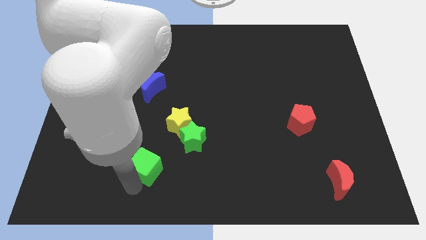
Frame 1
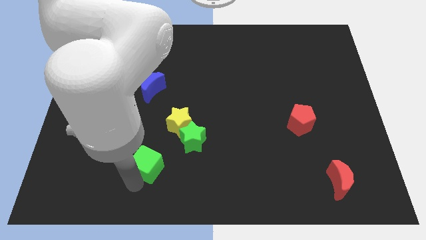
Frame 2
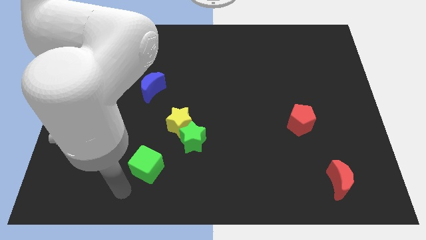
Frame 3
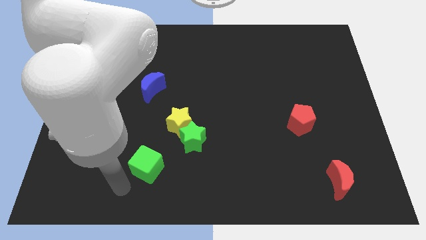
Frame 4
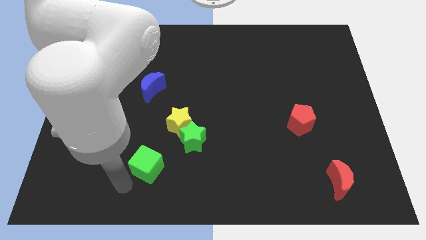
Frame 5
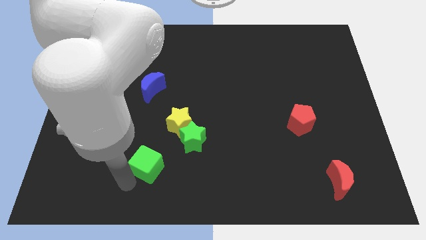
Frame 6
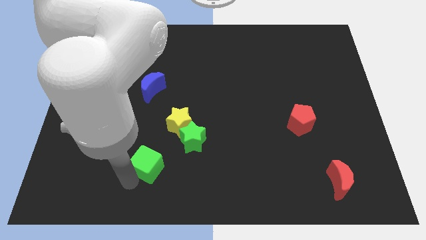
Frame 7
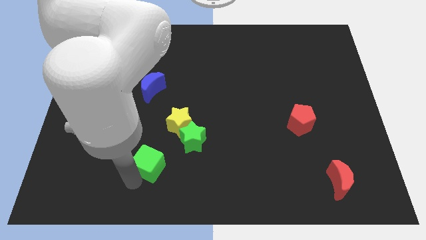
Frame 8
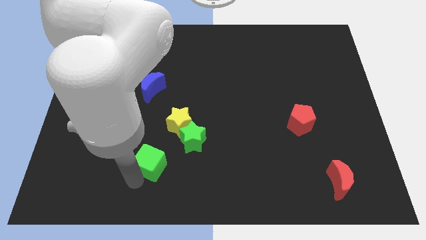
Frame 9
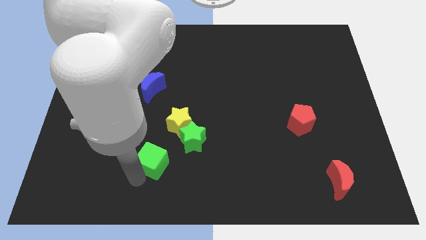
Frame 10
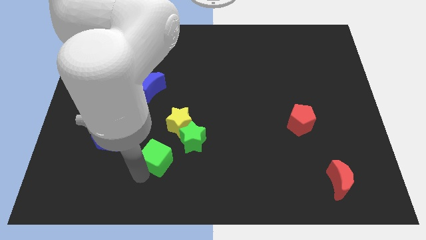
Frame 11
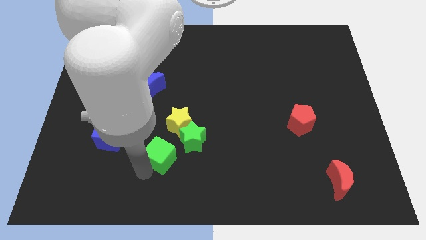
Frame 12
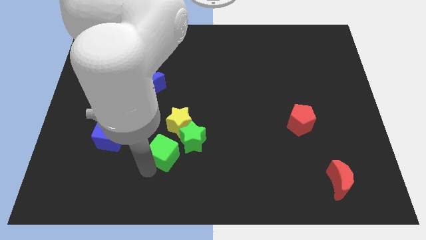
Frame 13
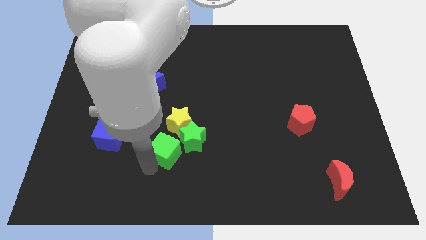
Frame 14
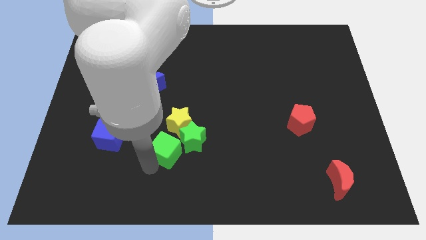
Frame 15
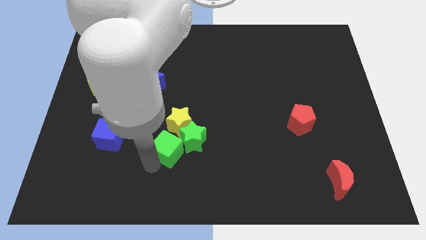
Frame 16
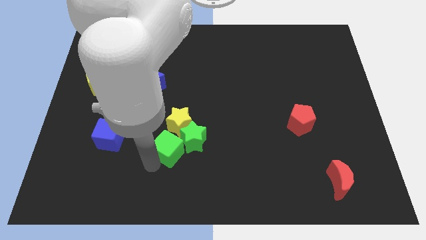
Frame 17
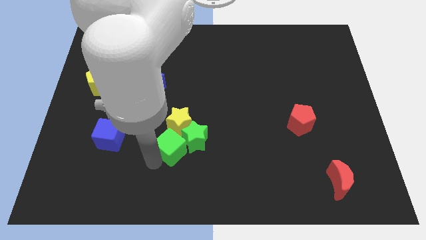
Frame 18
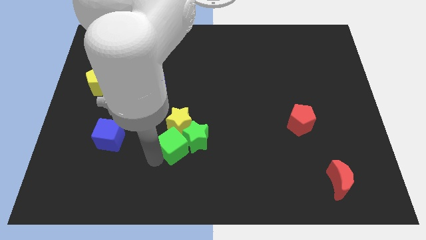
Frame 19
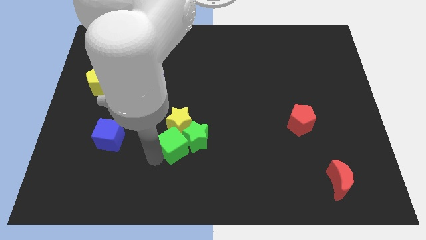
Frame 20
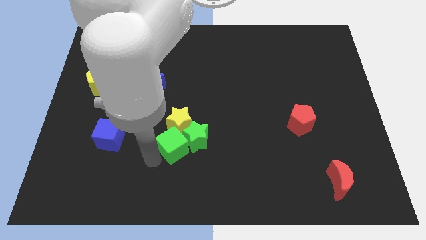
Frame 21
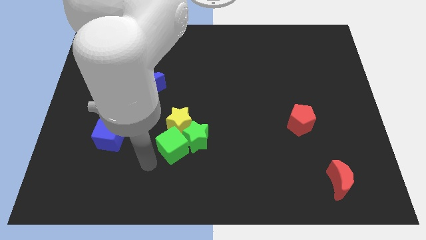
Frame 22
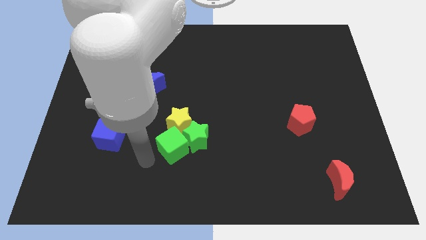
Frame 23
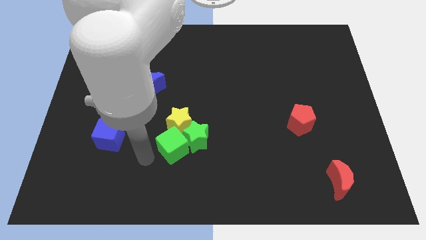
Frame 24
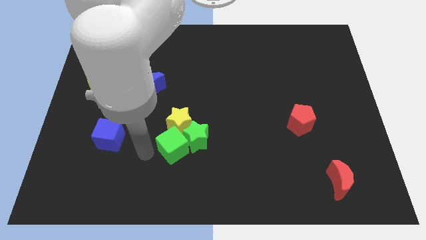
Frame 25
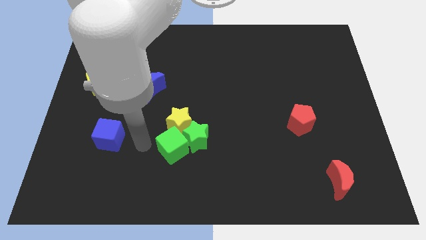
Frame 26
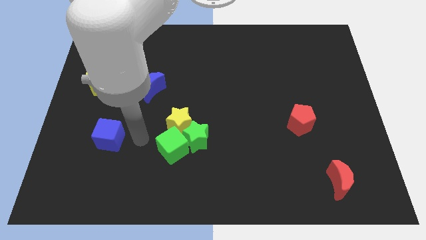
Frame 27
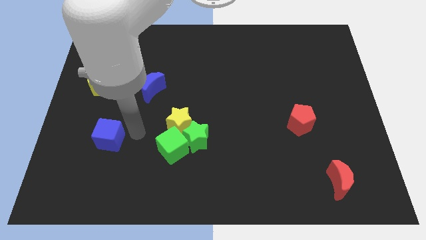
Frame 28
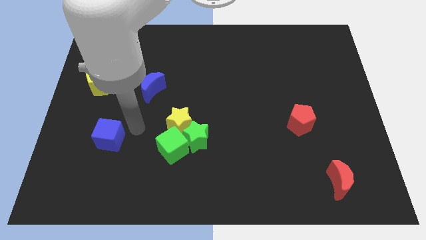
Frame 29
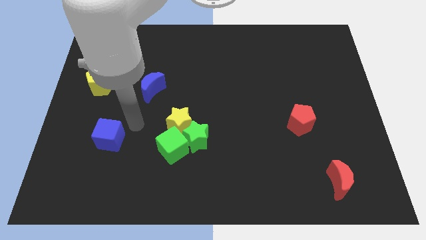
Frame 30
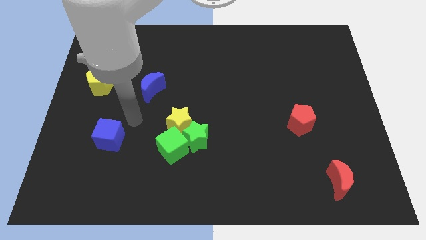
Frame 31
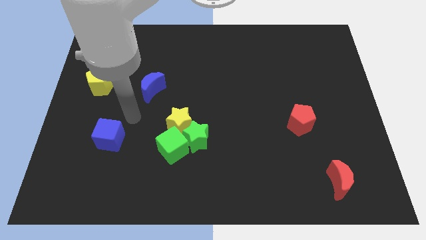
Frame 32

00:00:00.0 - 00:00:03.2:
push the green cube into the green star

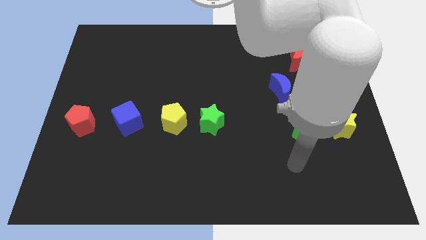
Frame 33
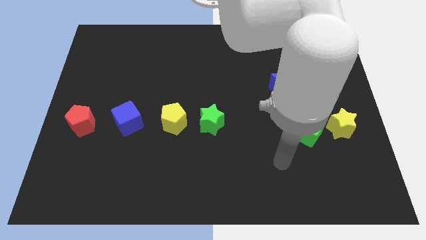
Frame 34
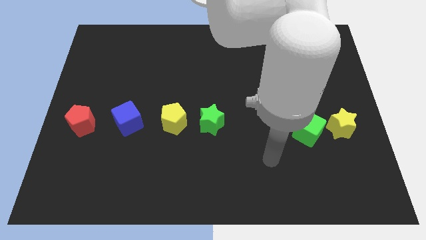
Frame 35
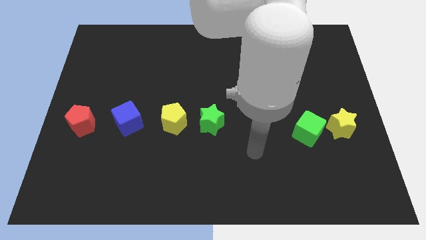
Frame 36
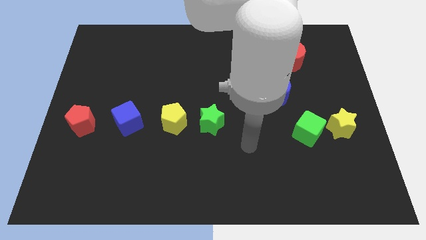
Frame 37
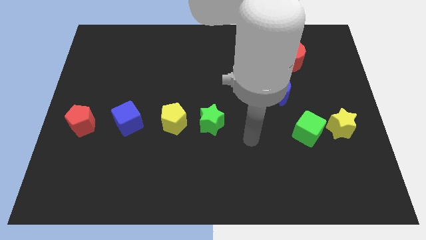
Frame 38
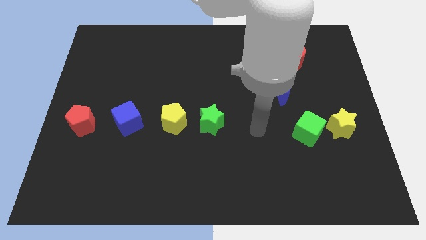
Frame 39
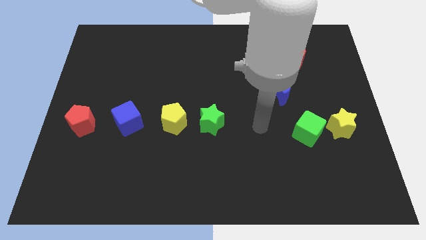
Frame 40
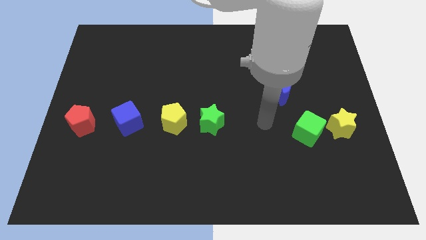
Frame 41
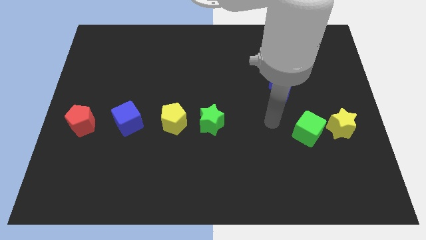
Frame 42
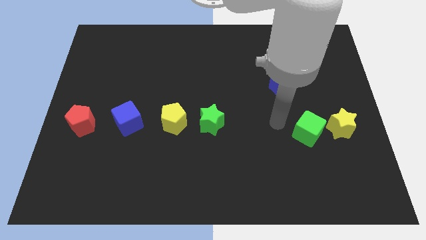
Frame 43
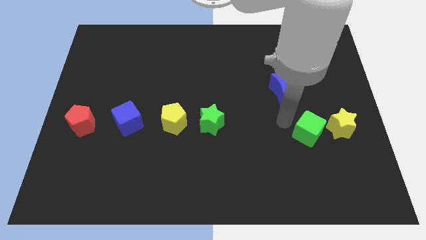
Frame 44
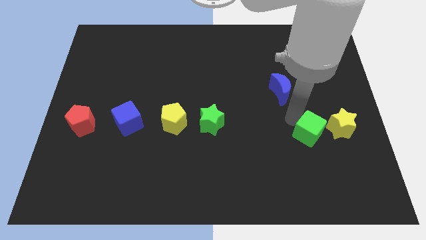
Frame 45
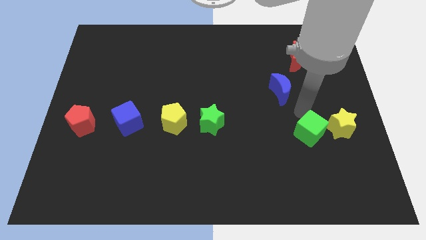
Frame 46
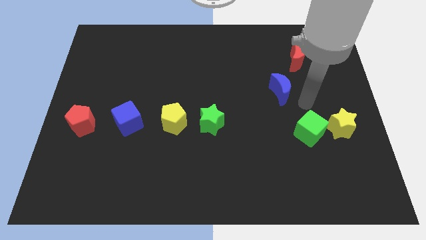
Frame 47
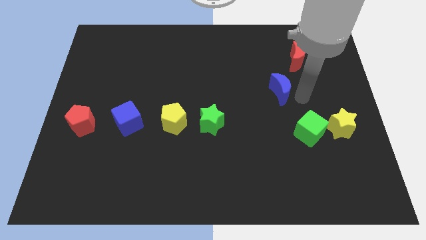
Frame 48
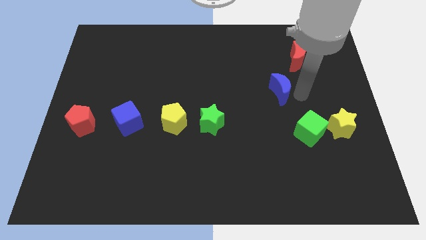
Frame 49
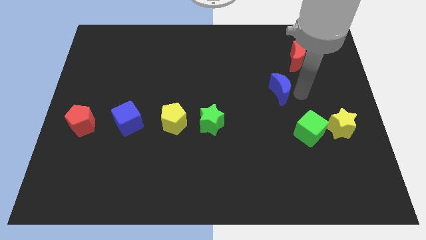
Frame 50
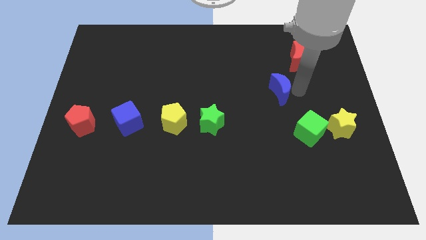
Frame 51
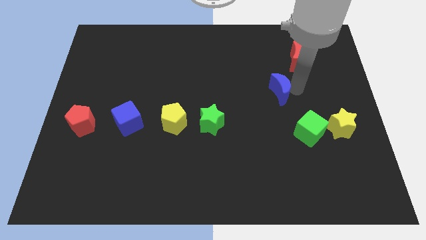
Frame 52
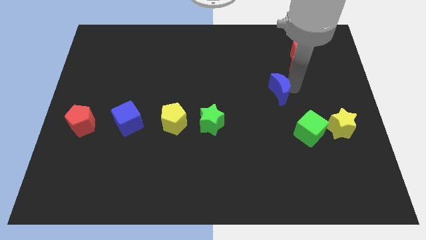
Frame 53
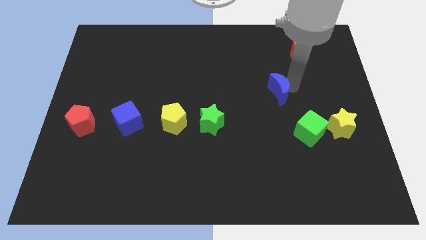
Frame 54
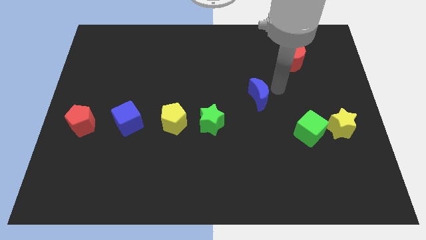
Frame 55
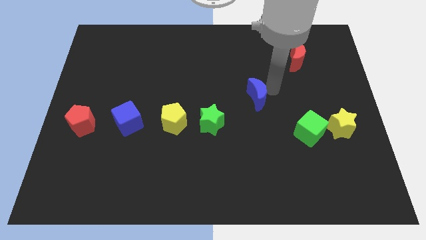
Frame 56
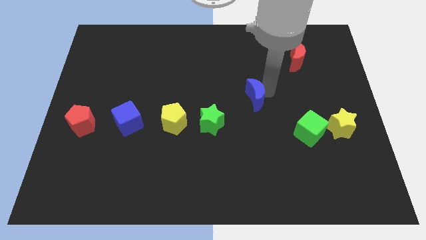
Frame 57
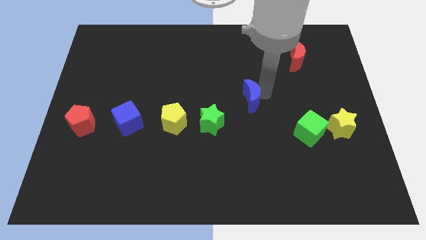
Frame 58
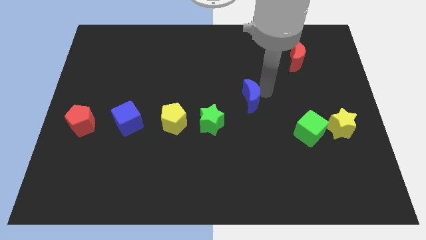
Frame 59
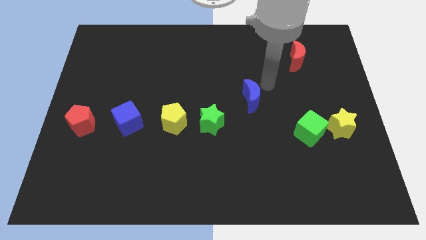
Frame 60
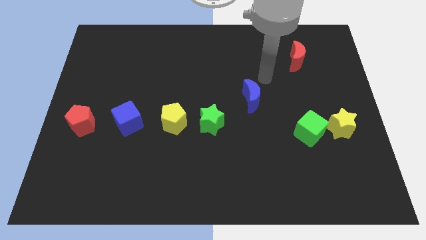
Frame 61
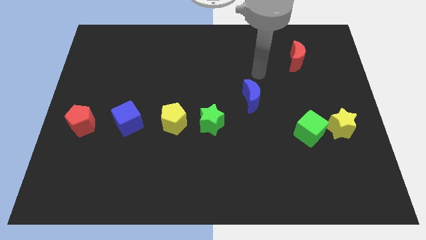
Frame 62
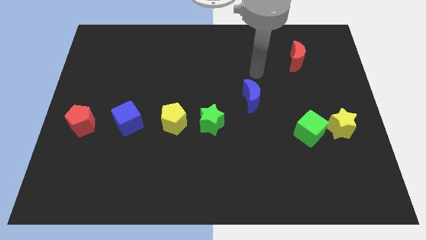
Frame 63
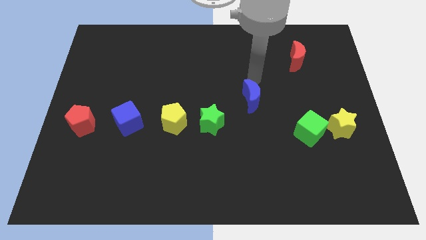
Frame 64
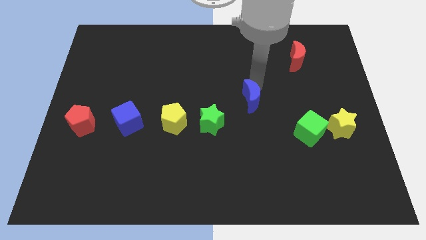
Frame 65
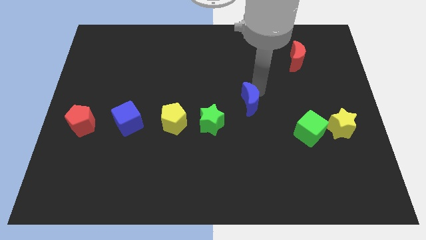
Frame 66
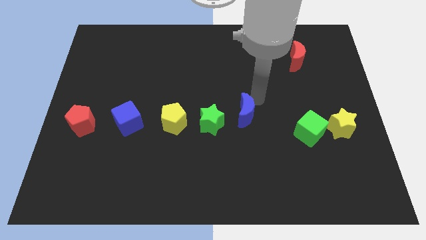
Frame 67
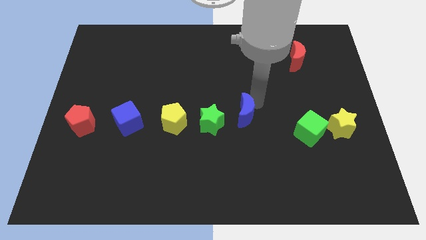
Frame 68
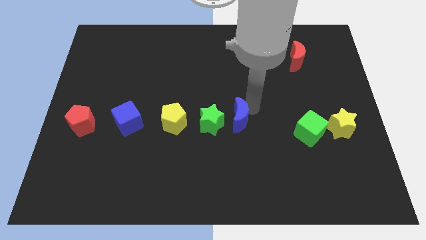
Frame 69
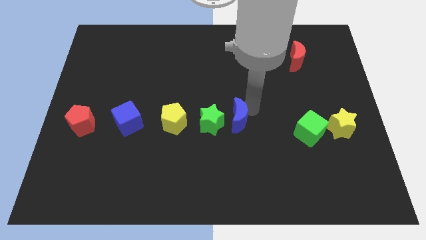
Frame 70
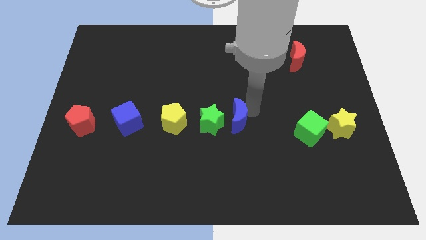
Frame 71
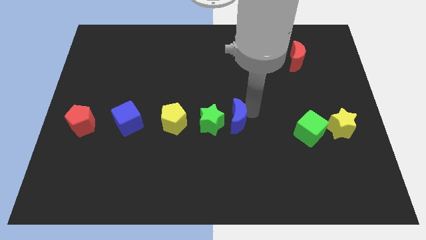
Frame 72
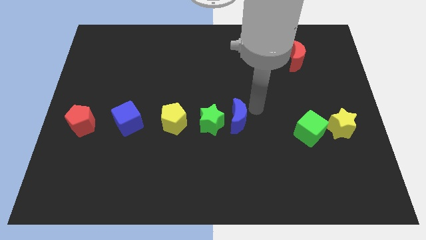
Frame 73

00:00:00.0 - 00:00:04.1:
place the blue moon on the right side of green star

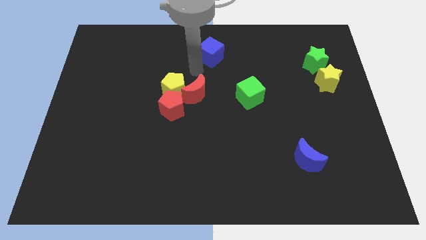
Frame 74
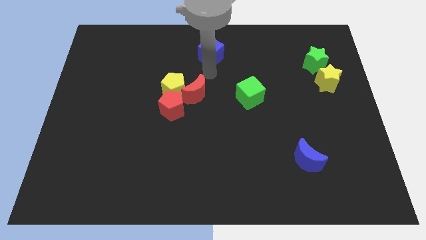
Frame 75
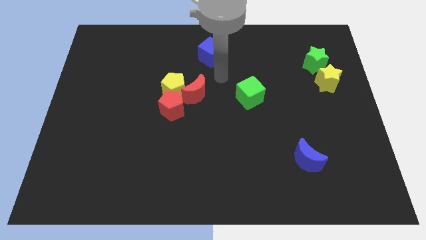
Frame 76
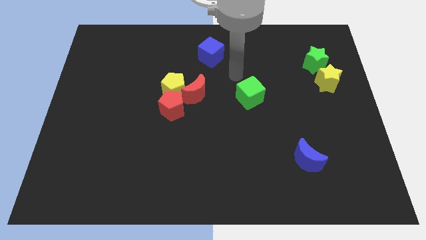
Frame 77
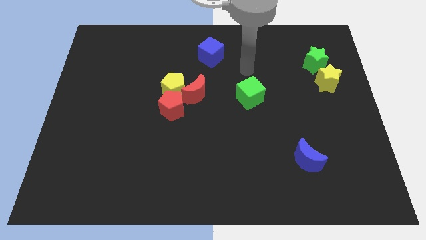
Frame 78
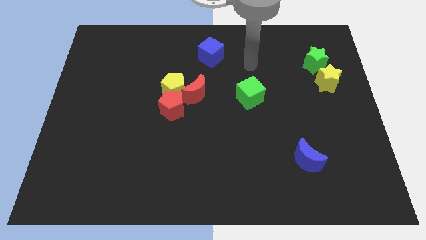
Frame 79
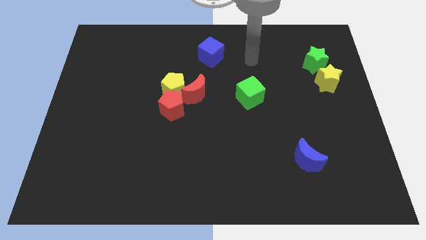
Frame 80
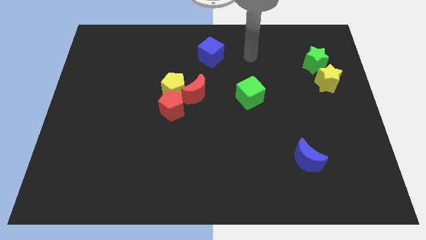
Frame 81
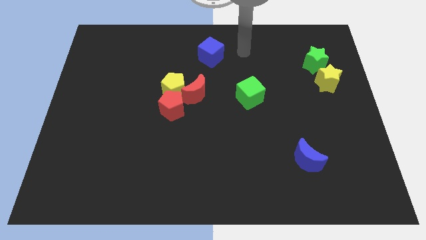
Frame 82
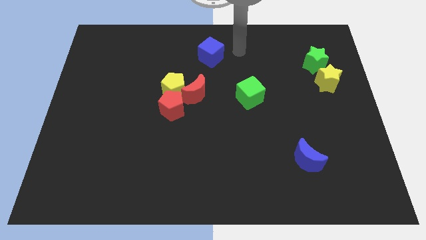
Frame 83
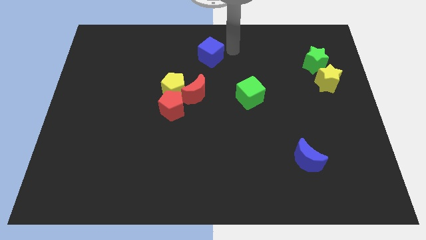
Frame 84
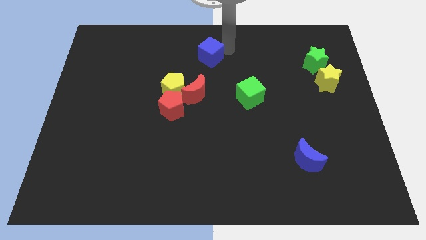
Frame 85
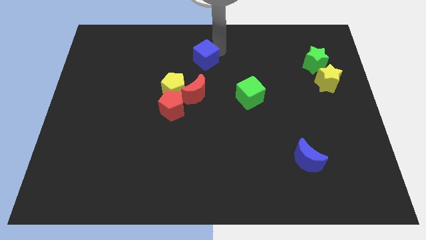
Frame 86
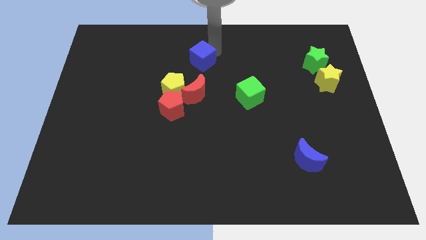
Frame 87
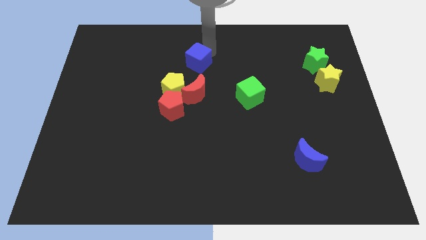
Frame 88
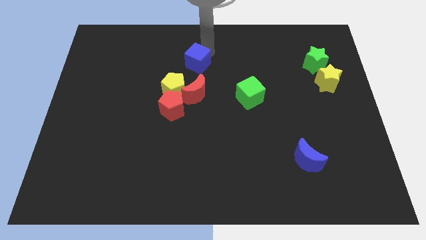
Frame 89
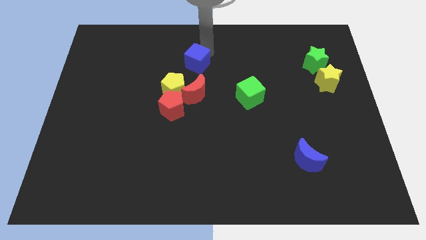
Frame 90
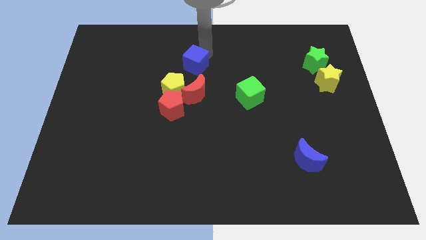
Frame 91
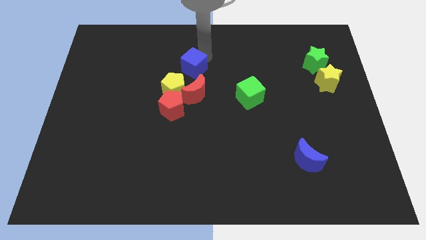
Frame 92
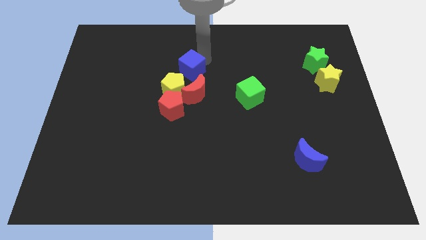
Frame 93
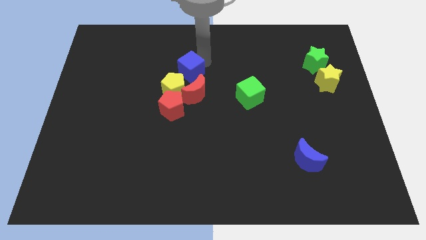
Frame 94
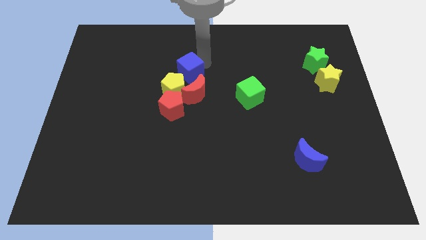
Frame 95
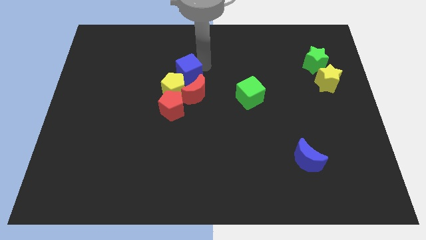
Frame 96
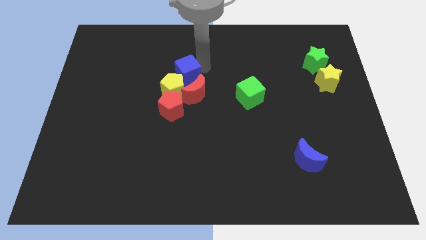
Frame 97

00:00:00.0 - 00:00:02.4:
push the blue cube close into the yellow pentagon
